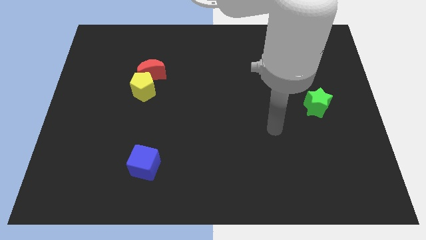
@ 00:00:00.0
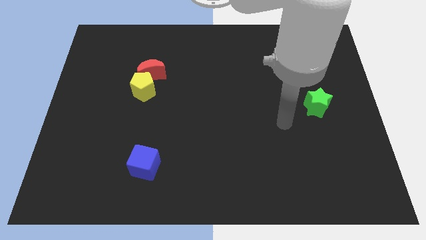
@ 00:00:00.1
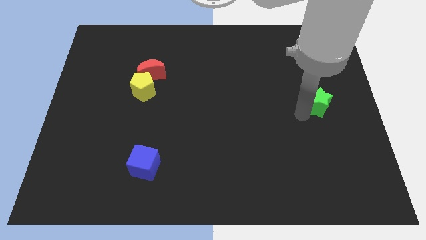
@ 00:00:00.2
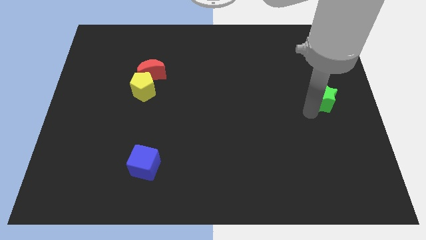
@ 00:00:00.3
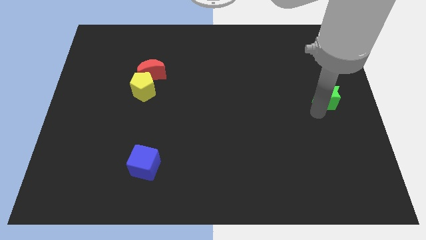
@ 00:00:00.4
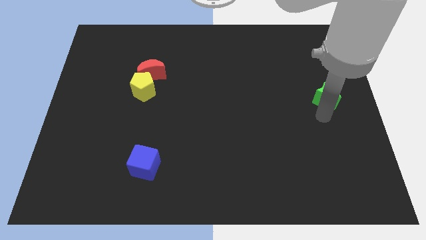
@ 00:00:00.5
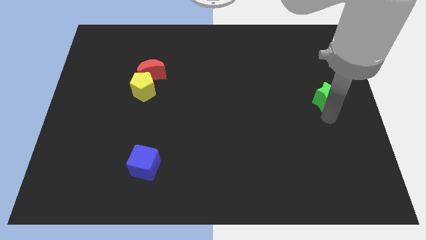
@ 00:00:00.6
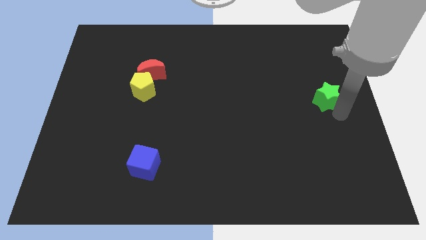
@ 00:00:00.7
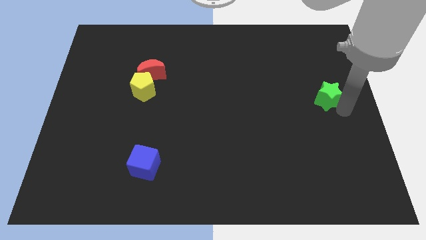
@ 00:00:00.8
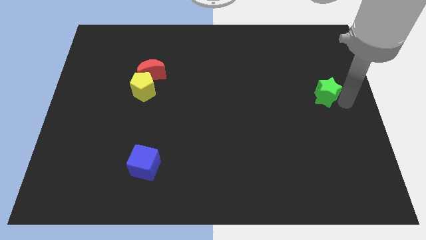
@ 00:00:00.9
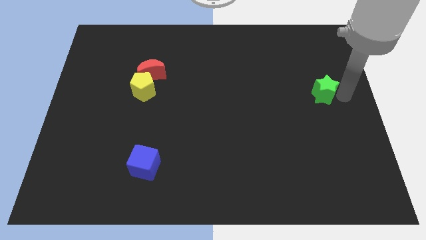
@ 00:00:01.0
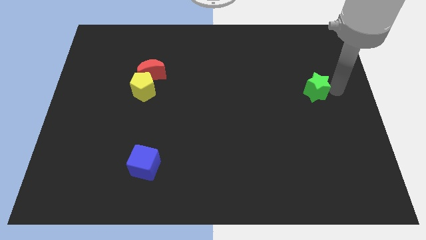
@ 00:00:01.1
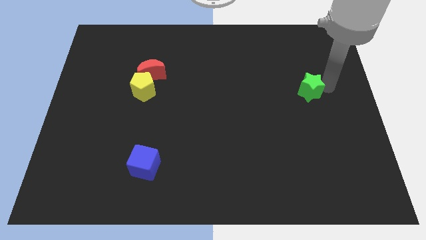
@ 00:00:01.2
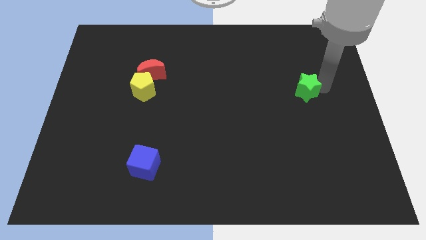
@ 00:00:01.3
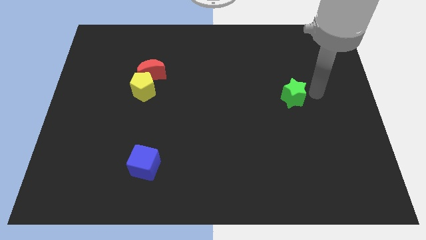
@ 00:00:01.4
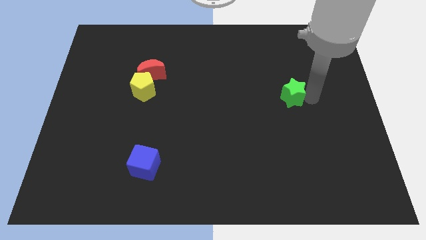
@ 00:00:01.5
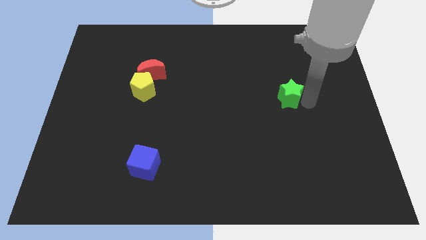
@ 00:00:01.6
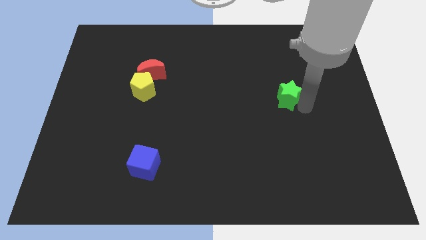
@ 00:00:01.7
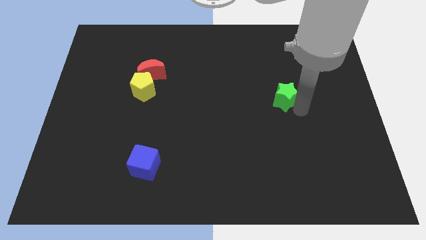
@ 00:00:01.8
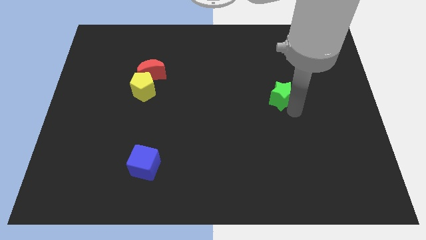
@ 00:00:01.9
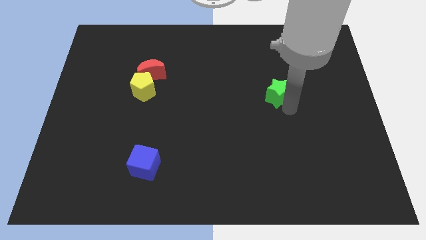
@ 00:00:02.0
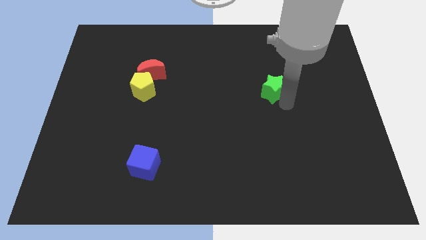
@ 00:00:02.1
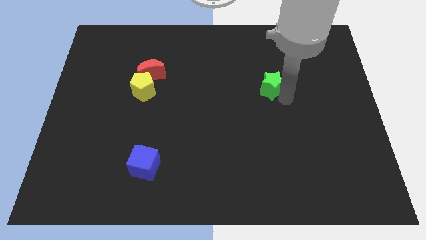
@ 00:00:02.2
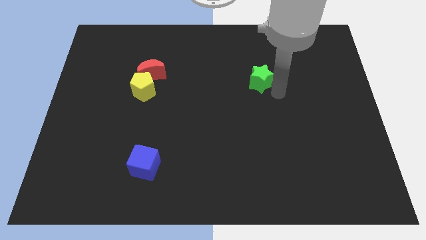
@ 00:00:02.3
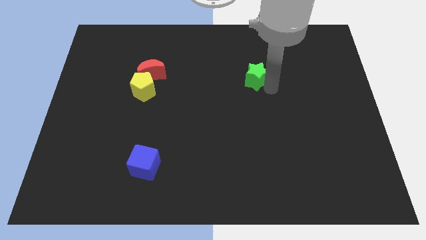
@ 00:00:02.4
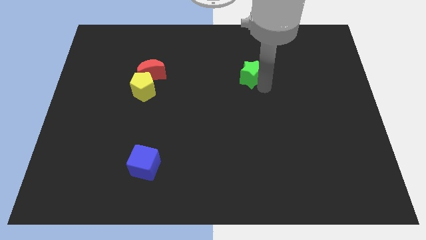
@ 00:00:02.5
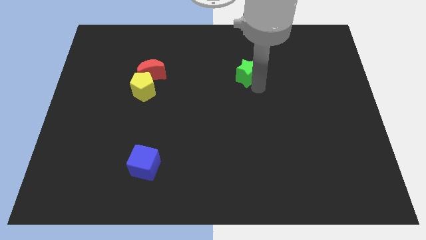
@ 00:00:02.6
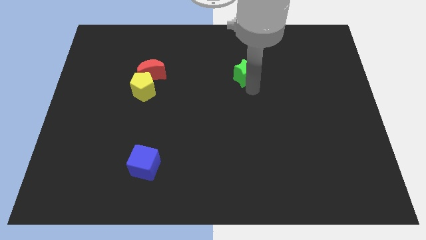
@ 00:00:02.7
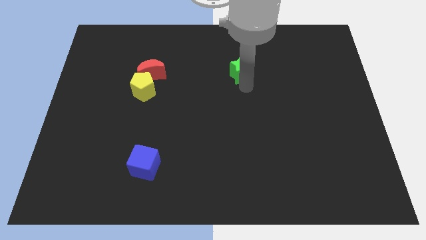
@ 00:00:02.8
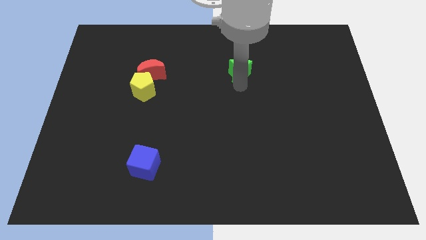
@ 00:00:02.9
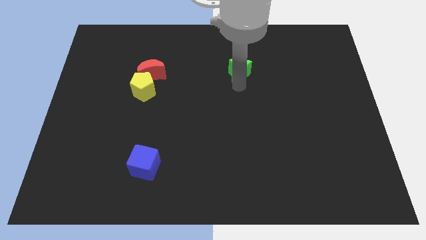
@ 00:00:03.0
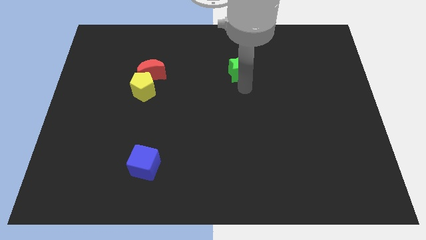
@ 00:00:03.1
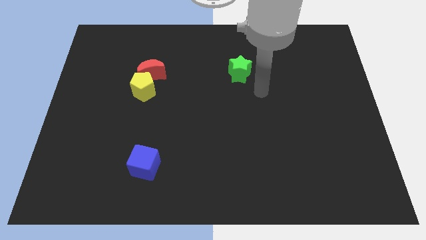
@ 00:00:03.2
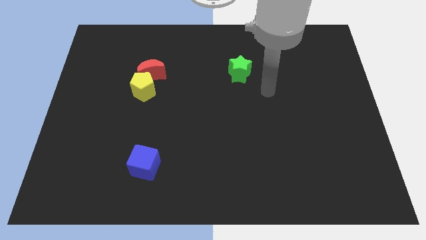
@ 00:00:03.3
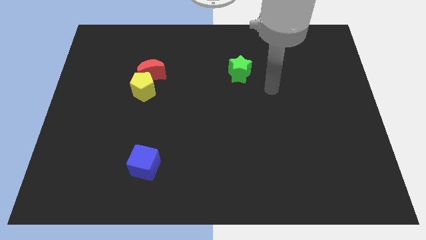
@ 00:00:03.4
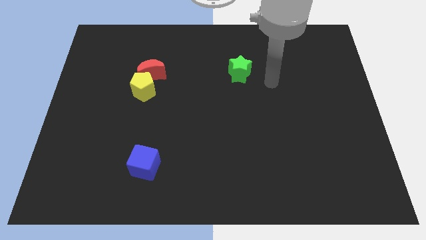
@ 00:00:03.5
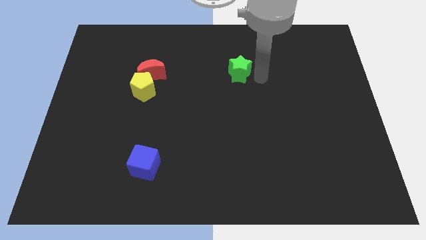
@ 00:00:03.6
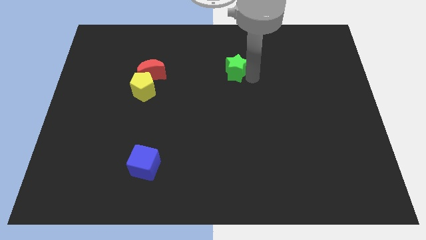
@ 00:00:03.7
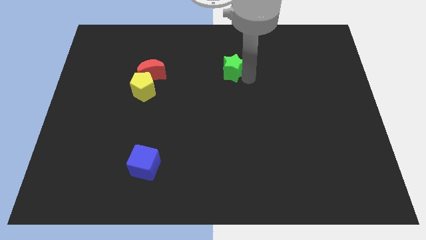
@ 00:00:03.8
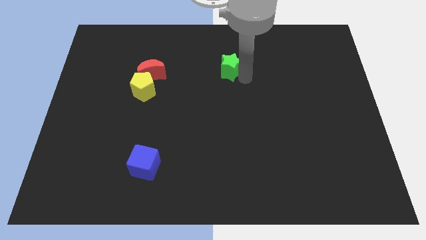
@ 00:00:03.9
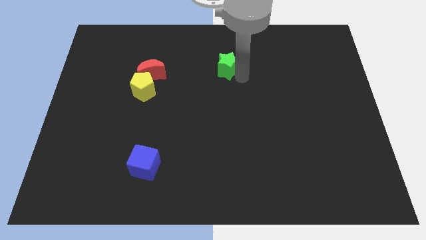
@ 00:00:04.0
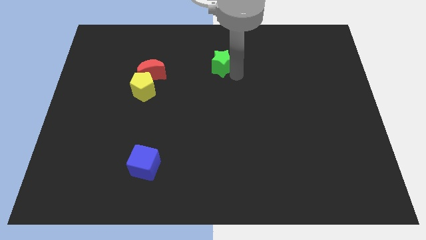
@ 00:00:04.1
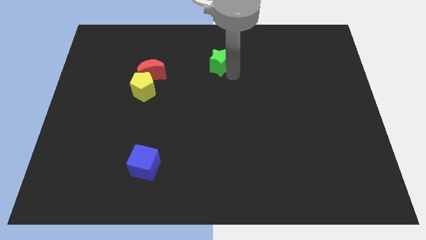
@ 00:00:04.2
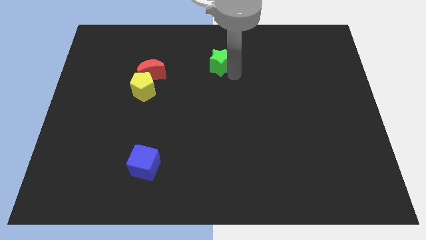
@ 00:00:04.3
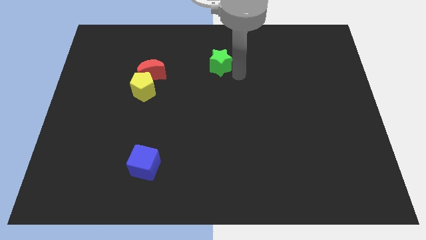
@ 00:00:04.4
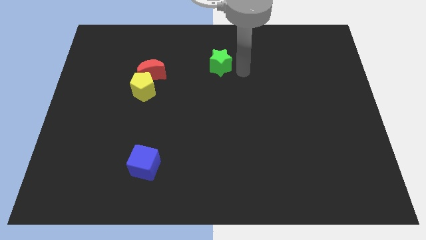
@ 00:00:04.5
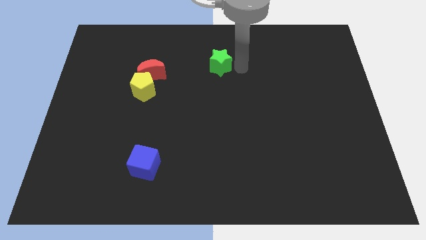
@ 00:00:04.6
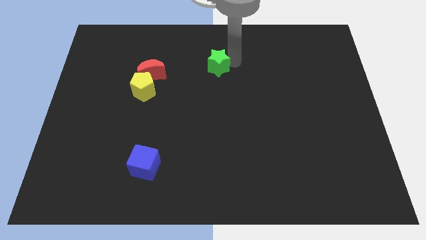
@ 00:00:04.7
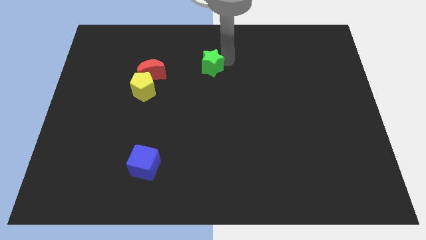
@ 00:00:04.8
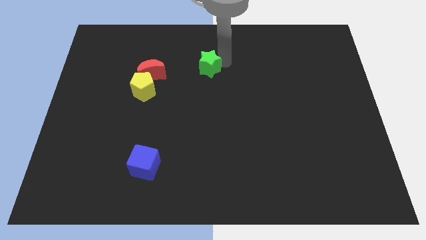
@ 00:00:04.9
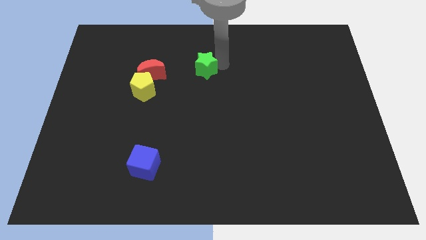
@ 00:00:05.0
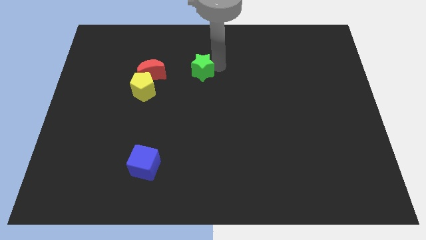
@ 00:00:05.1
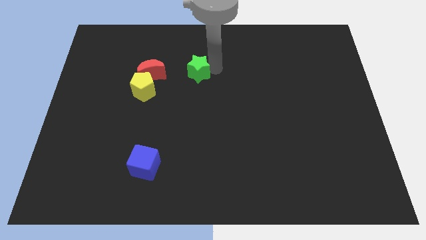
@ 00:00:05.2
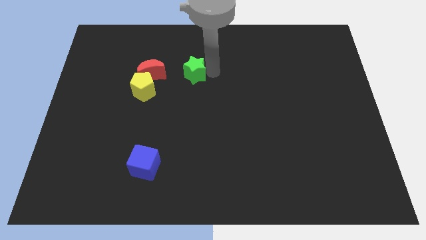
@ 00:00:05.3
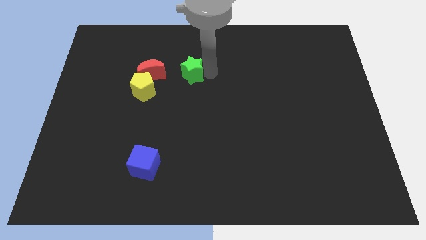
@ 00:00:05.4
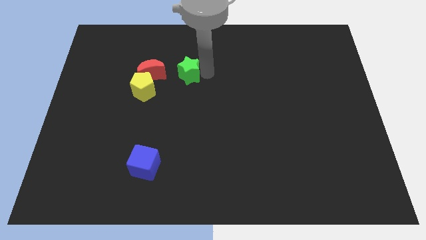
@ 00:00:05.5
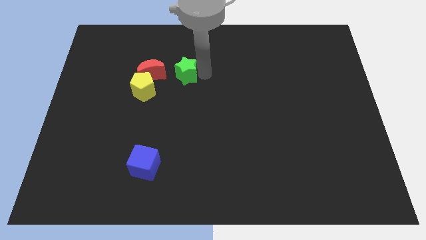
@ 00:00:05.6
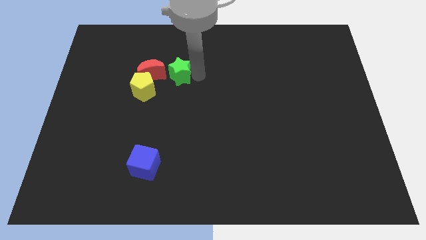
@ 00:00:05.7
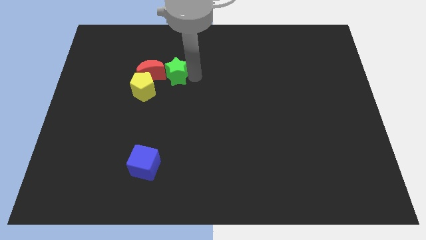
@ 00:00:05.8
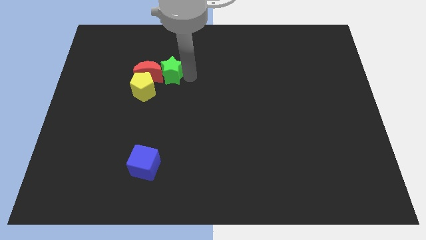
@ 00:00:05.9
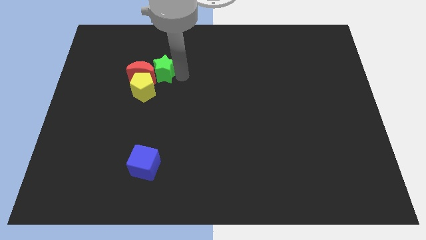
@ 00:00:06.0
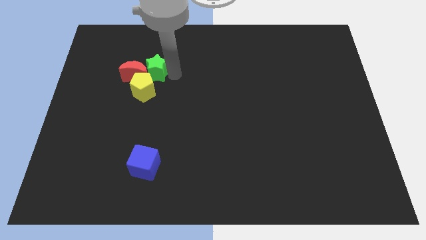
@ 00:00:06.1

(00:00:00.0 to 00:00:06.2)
slide the green block towards the red block

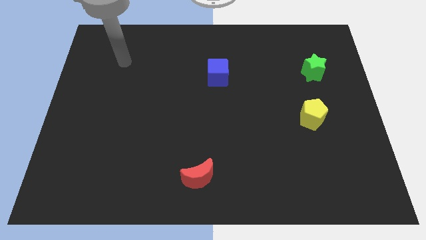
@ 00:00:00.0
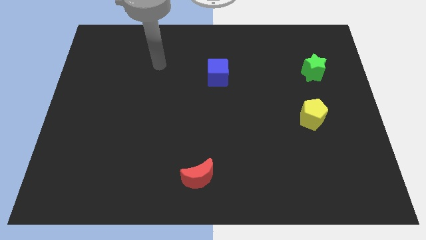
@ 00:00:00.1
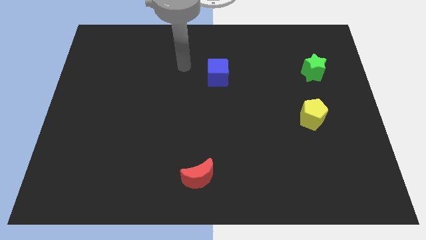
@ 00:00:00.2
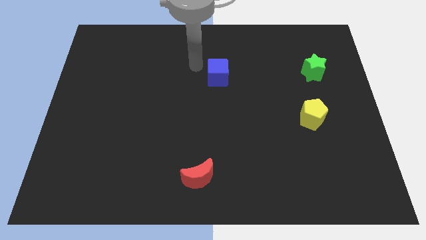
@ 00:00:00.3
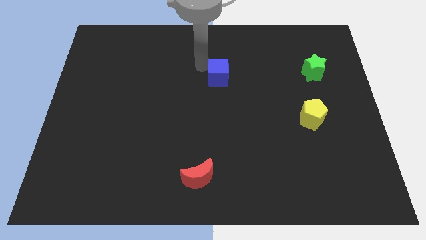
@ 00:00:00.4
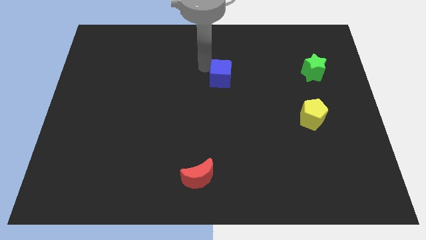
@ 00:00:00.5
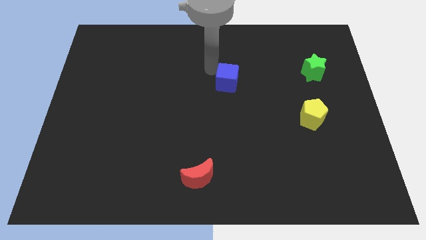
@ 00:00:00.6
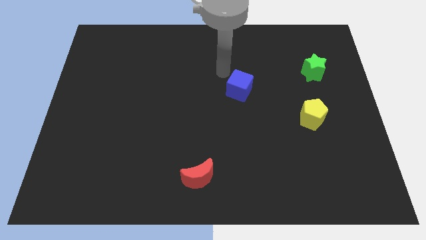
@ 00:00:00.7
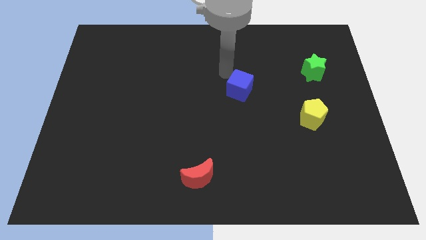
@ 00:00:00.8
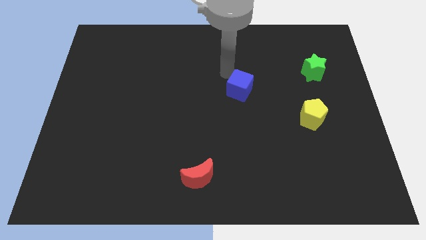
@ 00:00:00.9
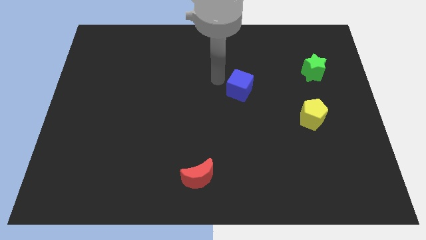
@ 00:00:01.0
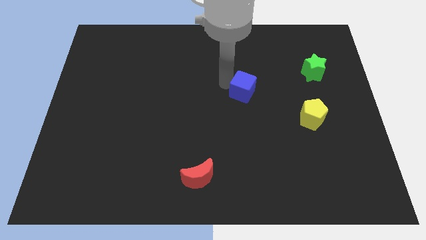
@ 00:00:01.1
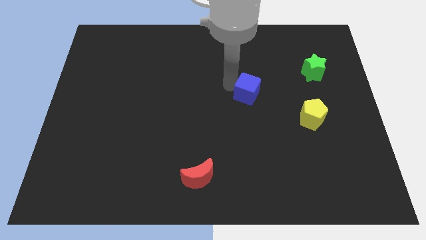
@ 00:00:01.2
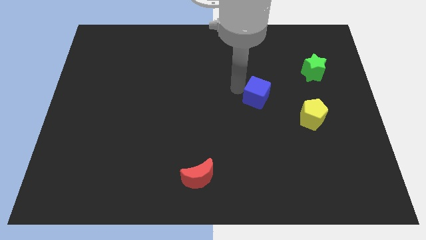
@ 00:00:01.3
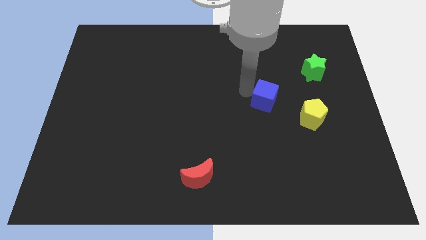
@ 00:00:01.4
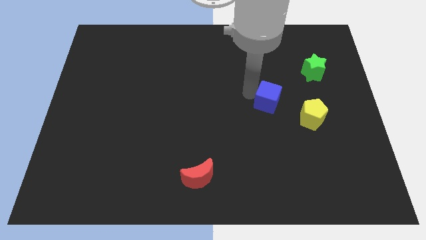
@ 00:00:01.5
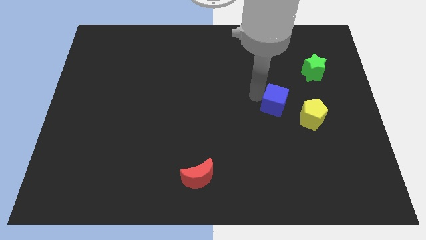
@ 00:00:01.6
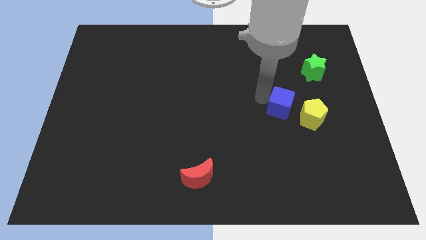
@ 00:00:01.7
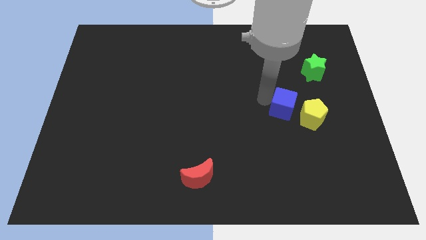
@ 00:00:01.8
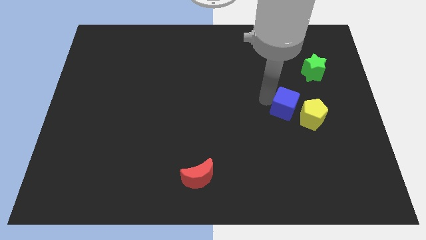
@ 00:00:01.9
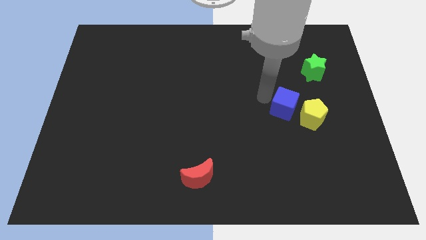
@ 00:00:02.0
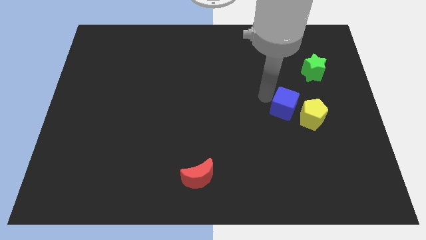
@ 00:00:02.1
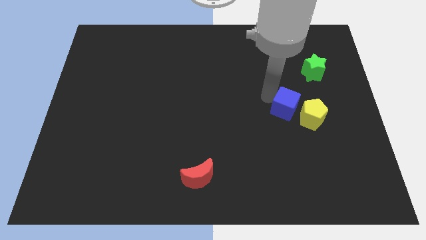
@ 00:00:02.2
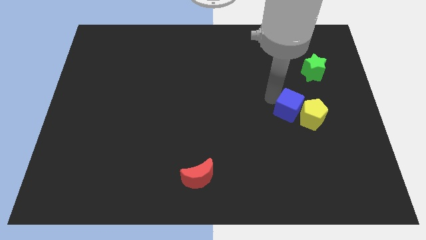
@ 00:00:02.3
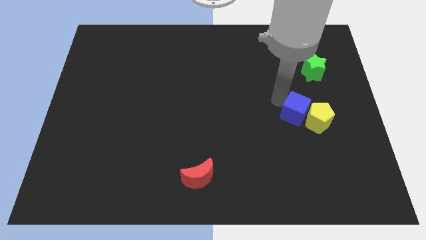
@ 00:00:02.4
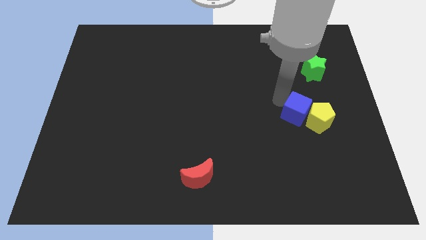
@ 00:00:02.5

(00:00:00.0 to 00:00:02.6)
put the blue block next to the yellow pentagon
